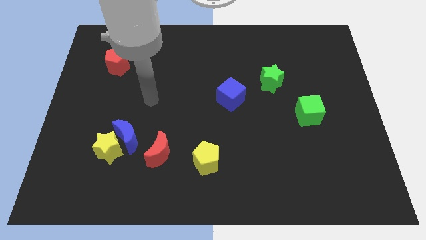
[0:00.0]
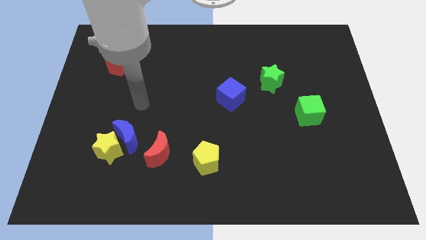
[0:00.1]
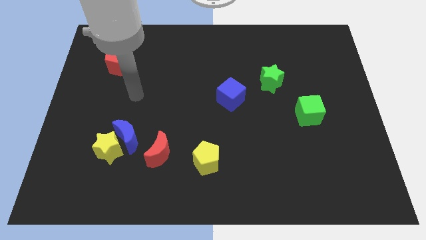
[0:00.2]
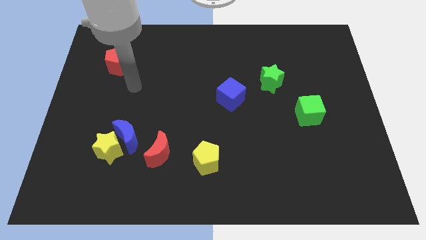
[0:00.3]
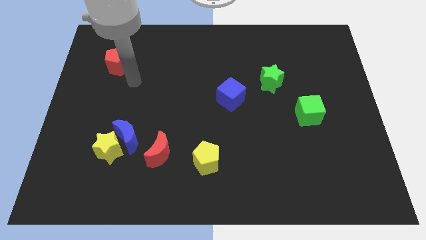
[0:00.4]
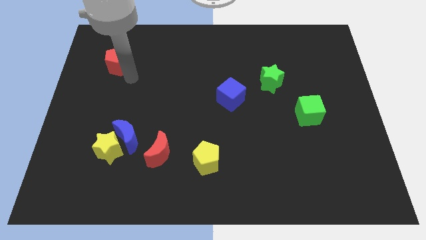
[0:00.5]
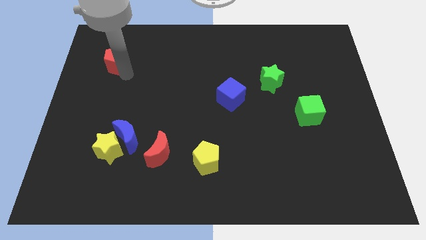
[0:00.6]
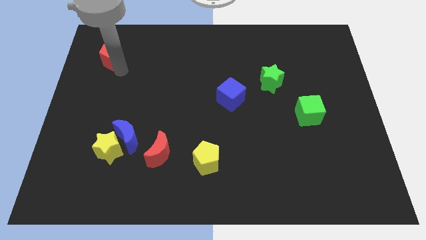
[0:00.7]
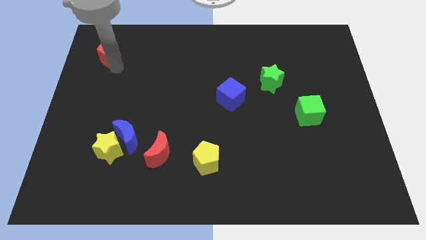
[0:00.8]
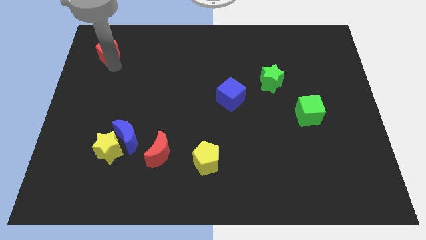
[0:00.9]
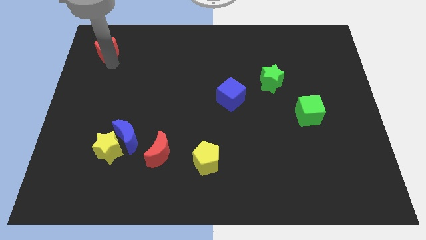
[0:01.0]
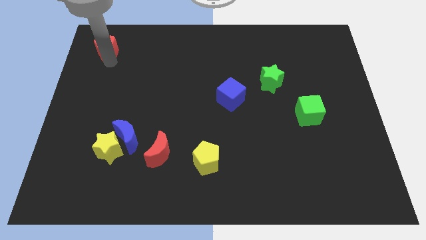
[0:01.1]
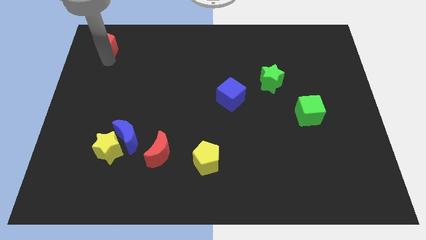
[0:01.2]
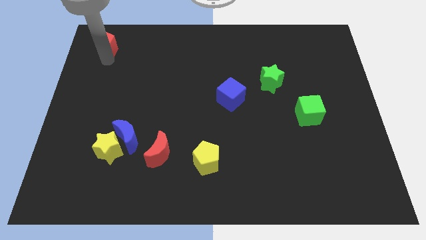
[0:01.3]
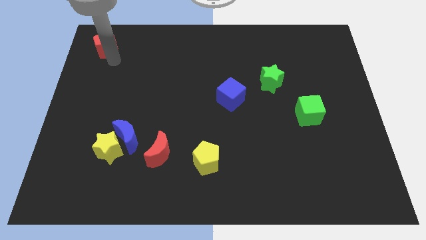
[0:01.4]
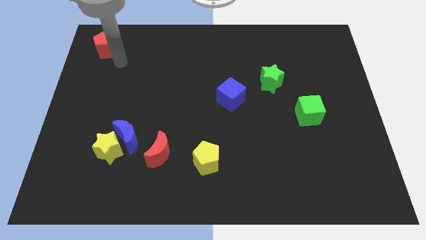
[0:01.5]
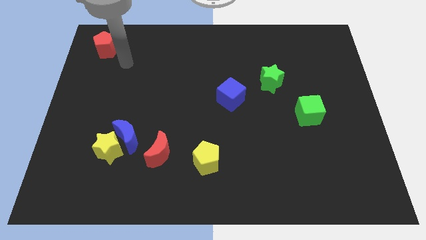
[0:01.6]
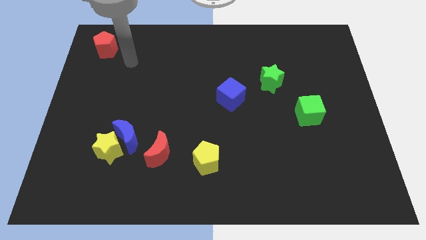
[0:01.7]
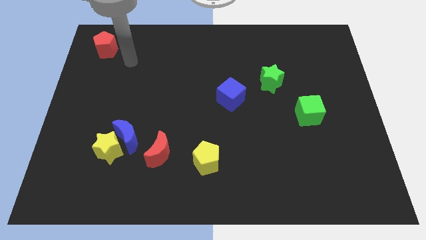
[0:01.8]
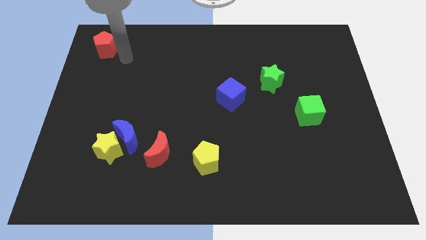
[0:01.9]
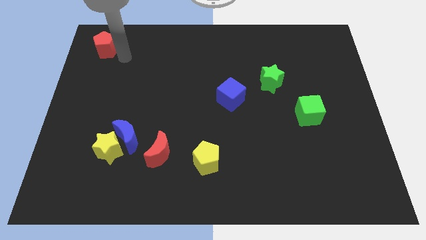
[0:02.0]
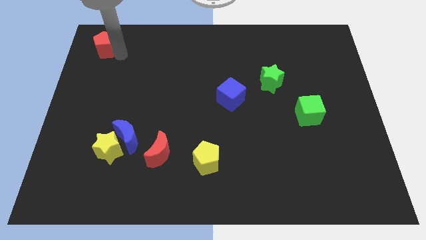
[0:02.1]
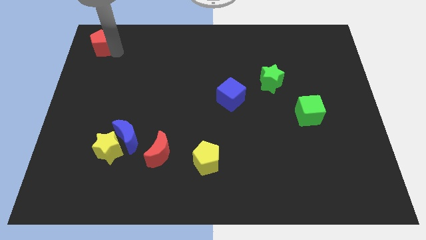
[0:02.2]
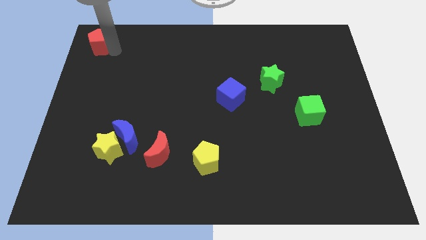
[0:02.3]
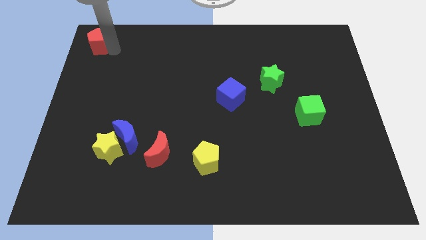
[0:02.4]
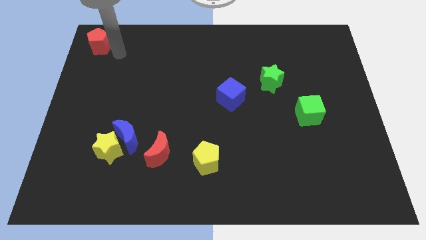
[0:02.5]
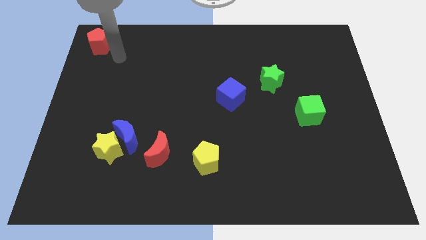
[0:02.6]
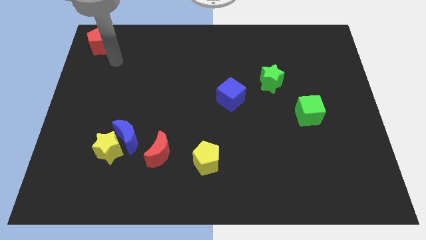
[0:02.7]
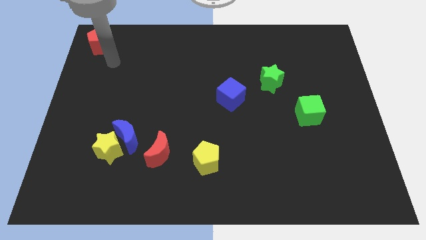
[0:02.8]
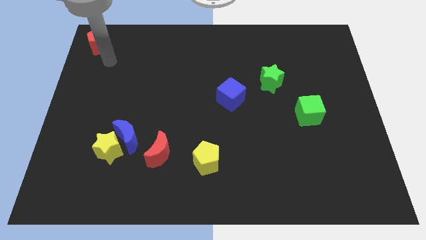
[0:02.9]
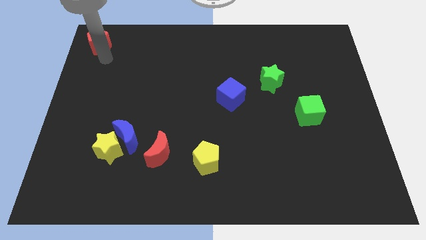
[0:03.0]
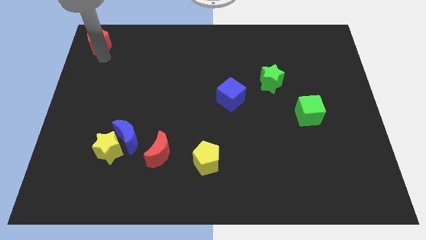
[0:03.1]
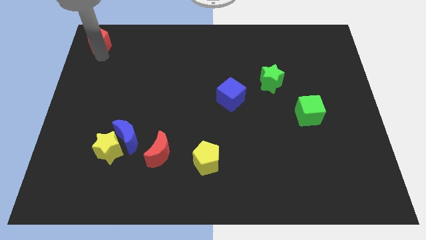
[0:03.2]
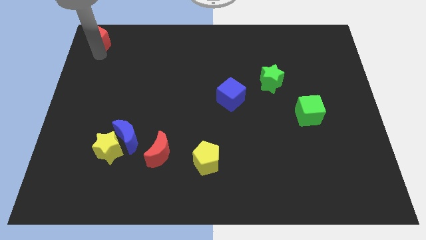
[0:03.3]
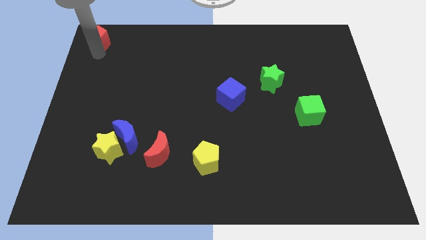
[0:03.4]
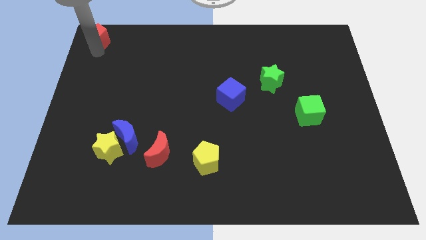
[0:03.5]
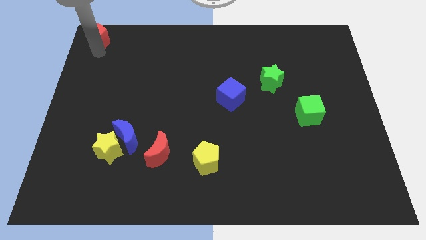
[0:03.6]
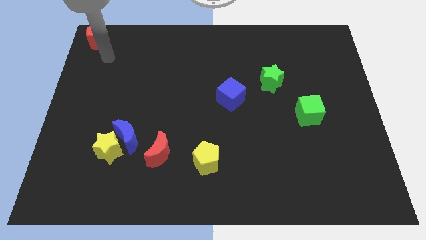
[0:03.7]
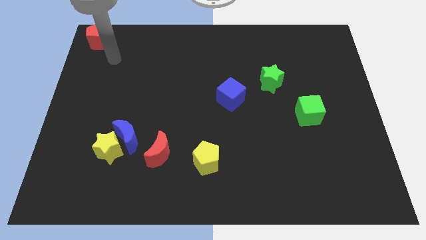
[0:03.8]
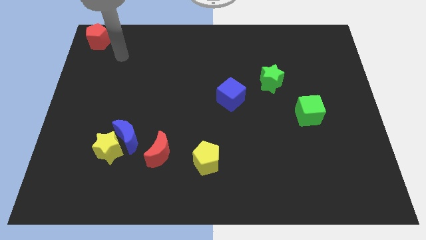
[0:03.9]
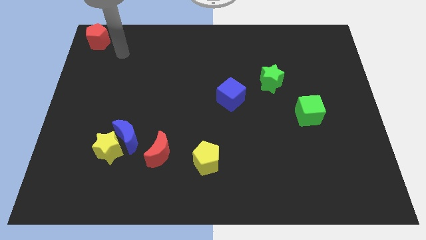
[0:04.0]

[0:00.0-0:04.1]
place the red pentagon at the top left corner of the board

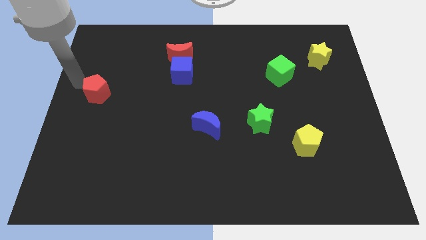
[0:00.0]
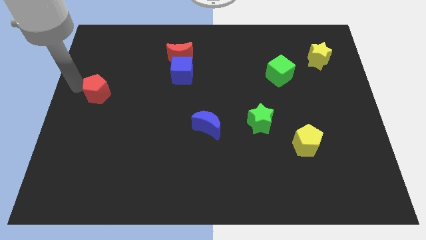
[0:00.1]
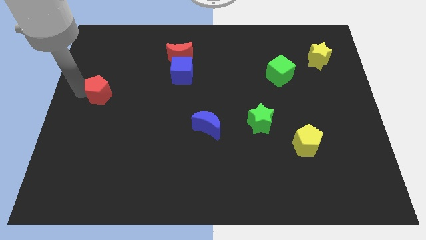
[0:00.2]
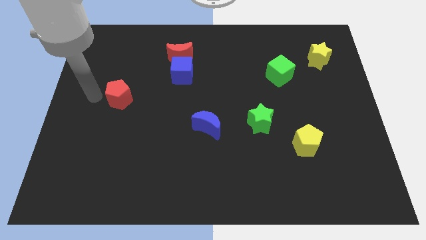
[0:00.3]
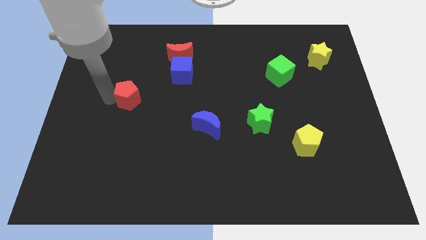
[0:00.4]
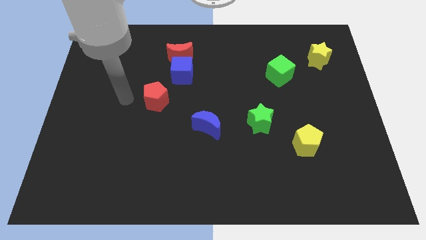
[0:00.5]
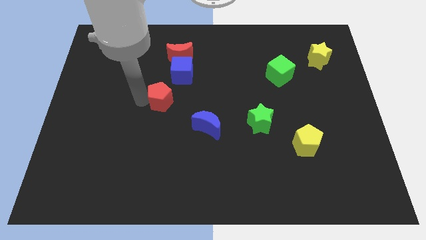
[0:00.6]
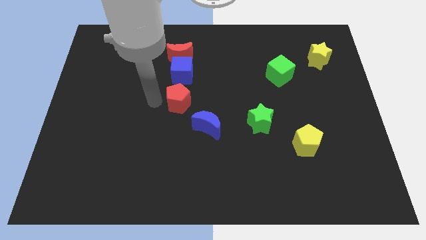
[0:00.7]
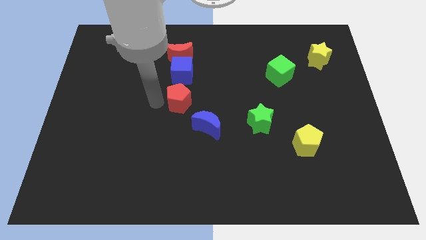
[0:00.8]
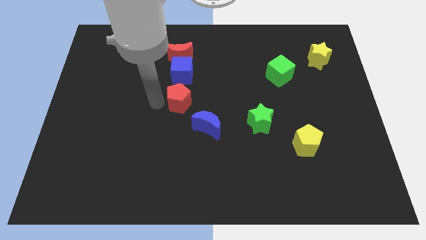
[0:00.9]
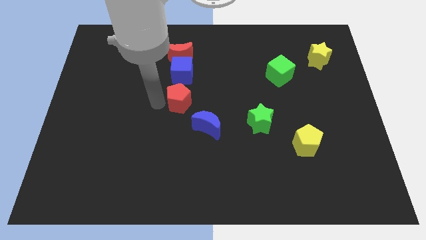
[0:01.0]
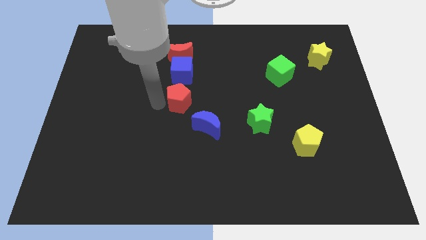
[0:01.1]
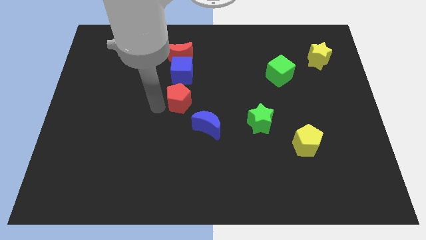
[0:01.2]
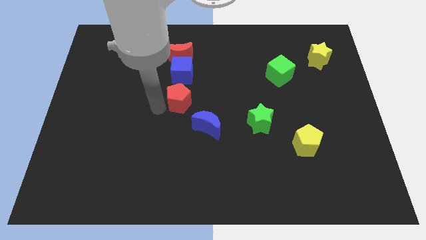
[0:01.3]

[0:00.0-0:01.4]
place the red pentagon in between the blue moon and the blue cube

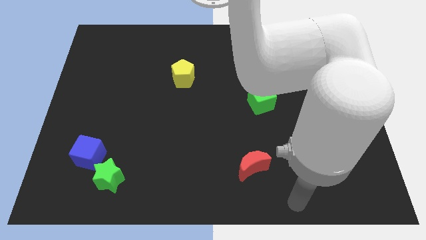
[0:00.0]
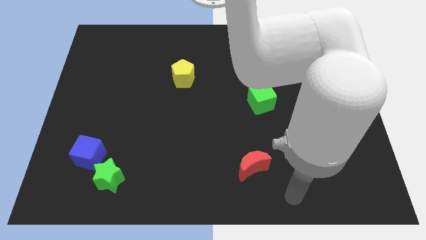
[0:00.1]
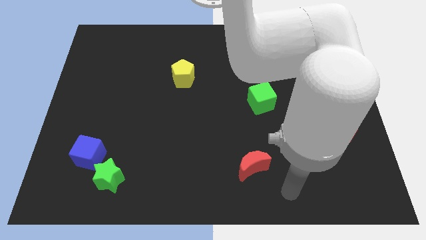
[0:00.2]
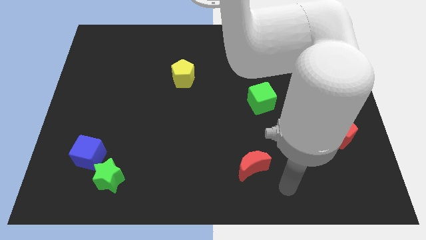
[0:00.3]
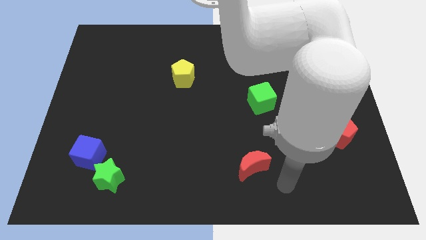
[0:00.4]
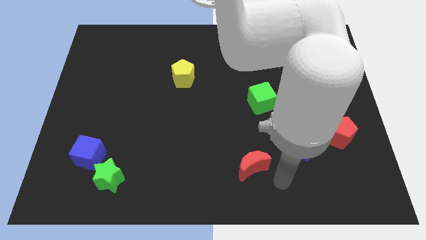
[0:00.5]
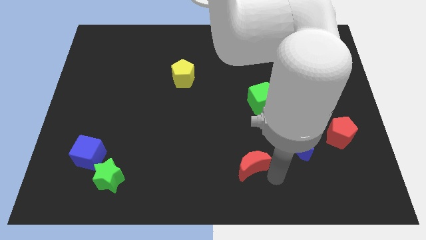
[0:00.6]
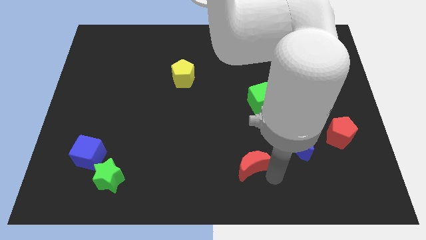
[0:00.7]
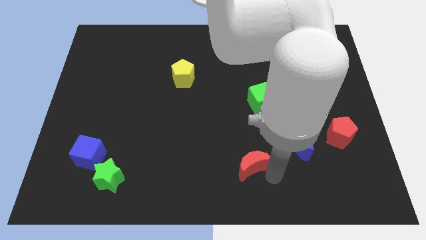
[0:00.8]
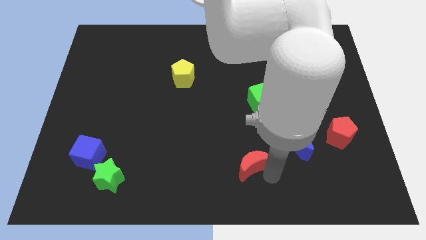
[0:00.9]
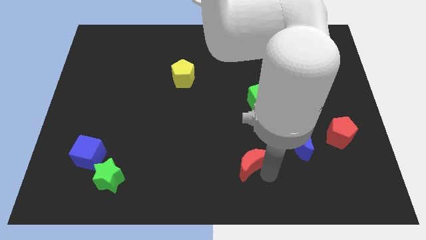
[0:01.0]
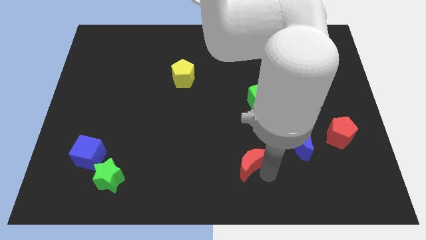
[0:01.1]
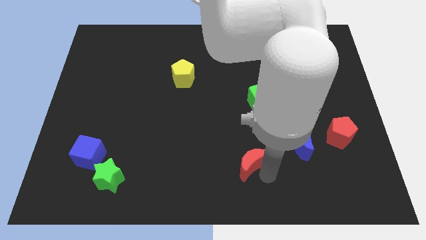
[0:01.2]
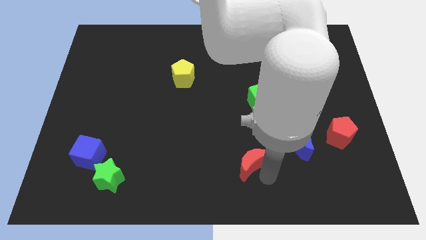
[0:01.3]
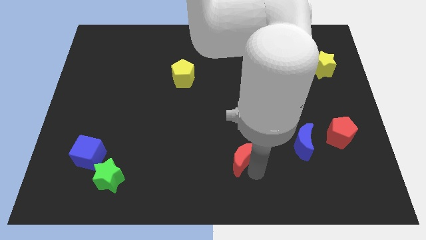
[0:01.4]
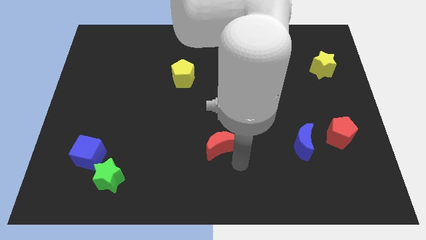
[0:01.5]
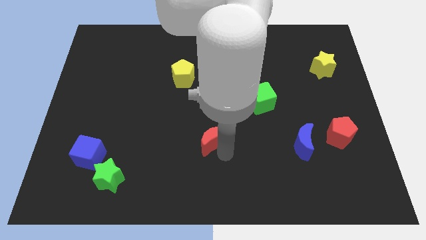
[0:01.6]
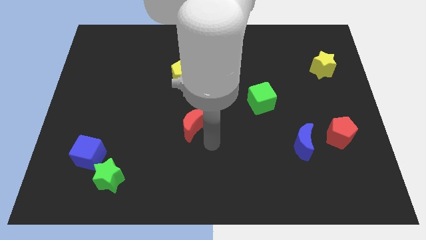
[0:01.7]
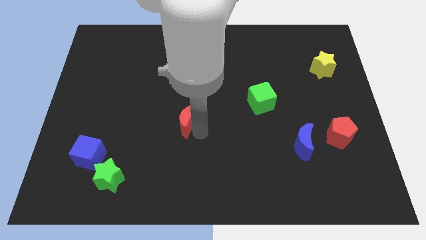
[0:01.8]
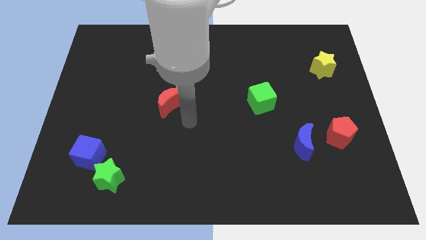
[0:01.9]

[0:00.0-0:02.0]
push the red crescent to the bottom of the yellow pentagon

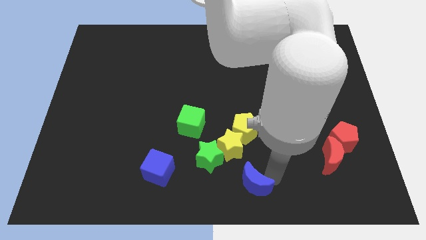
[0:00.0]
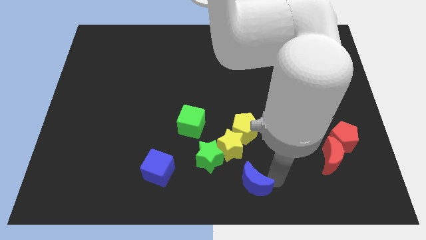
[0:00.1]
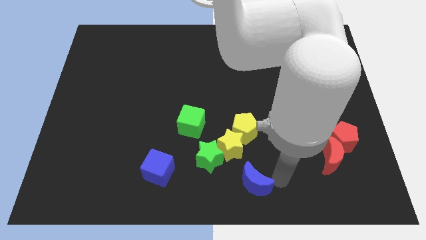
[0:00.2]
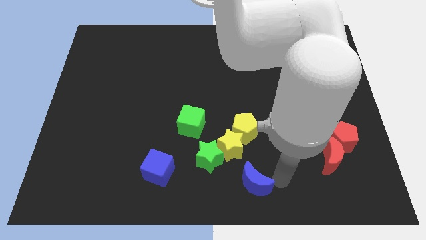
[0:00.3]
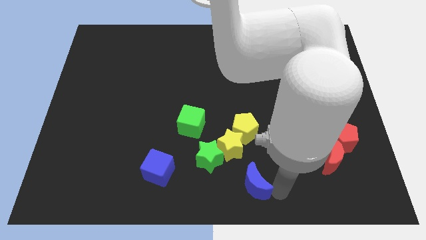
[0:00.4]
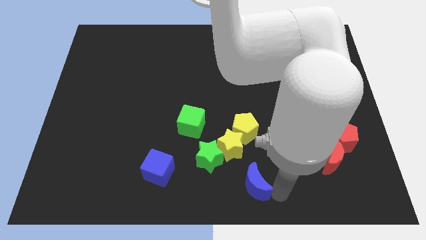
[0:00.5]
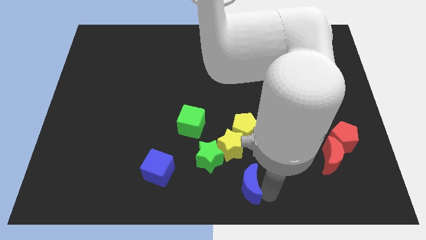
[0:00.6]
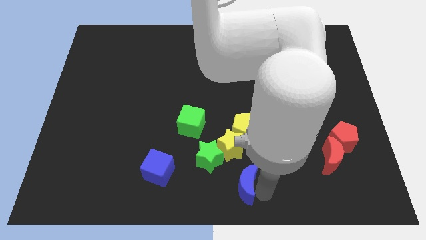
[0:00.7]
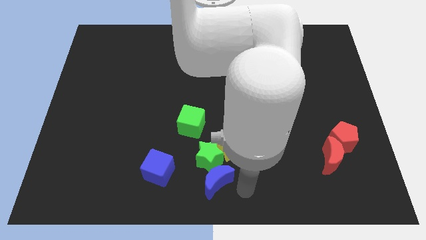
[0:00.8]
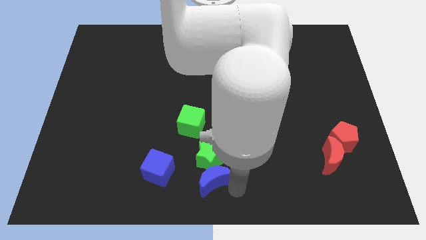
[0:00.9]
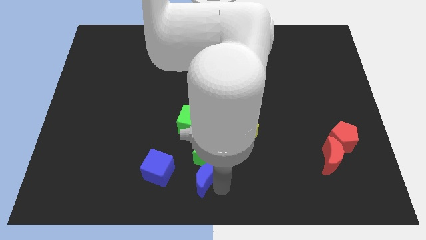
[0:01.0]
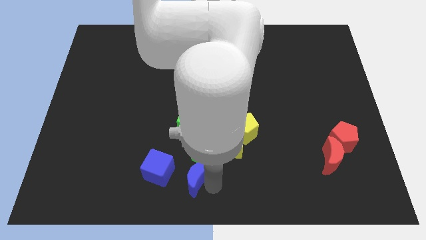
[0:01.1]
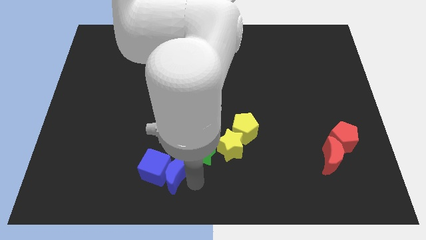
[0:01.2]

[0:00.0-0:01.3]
place the blue moon to the bottom of the green star
